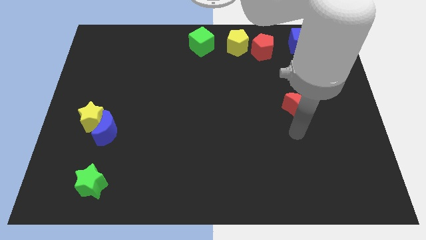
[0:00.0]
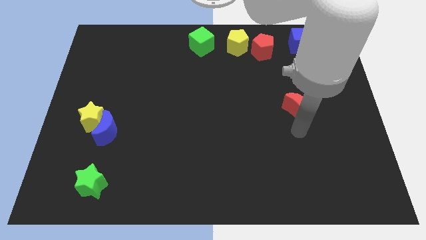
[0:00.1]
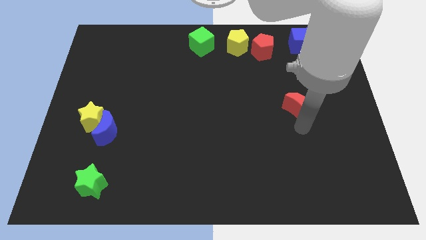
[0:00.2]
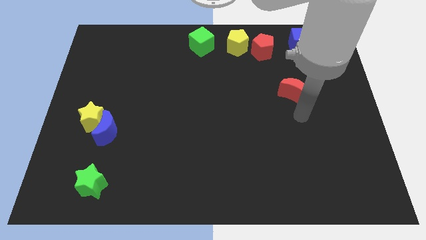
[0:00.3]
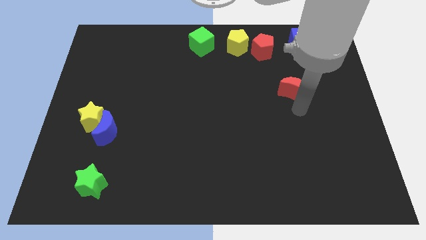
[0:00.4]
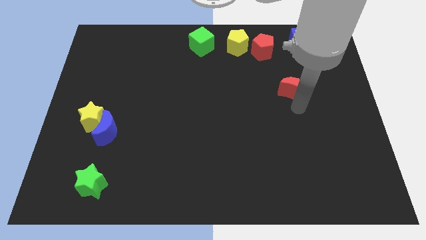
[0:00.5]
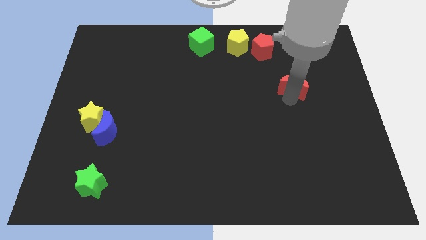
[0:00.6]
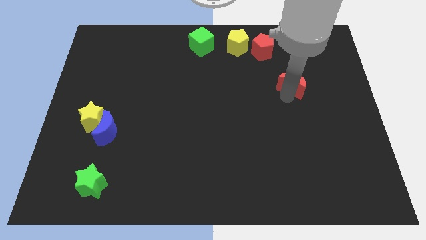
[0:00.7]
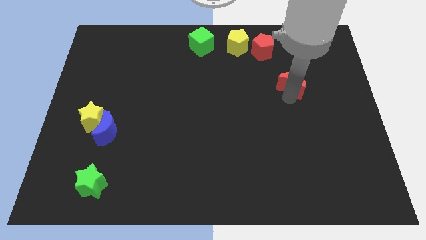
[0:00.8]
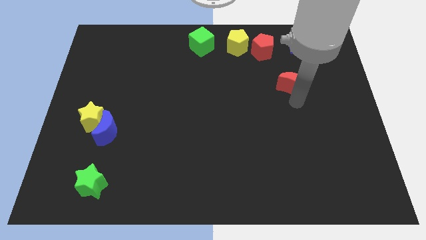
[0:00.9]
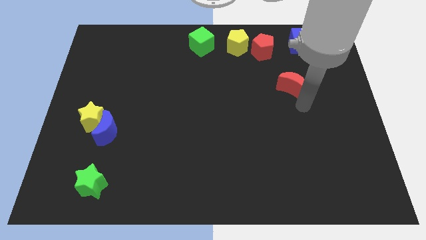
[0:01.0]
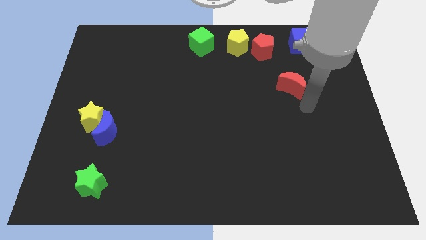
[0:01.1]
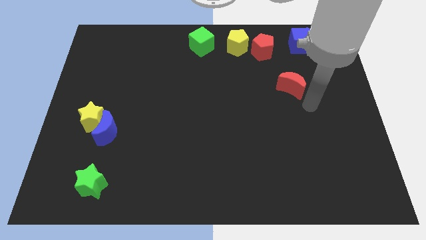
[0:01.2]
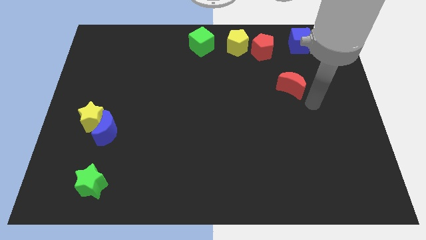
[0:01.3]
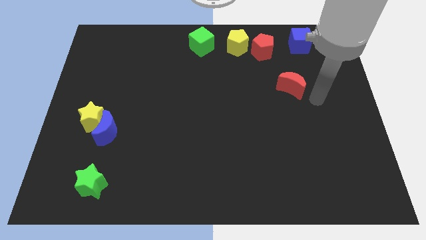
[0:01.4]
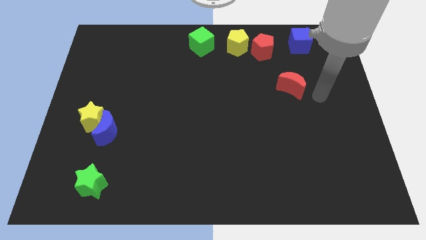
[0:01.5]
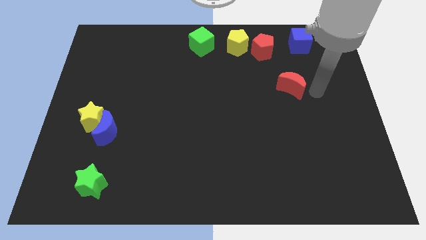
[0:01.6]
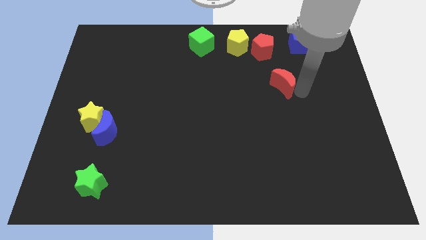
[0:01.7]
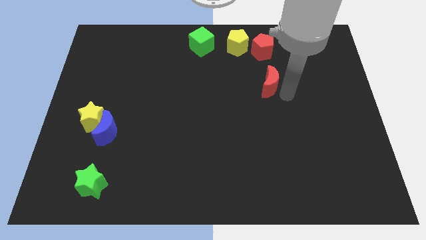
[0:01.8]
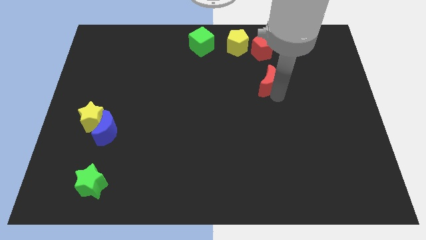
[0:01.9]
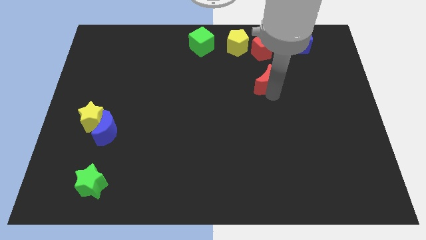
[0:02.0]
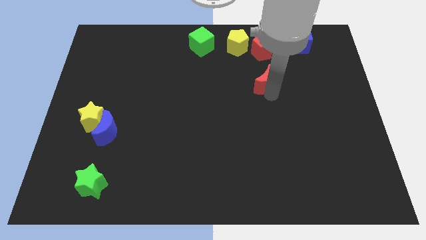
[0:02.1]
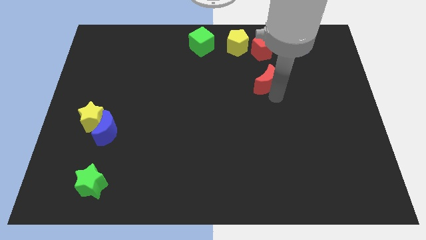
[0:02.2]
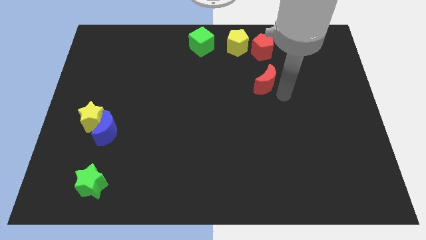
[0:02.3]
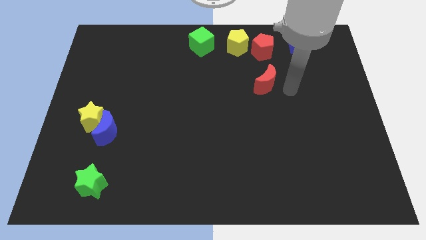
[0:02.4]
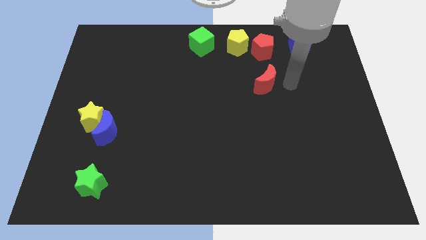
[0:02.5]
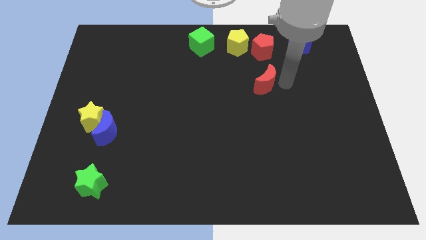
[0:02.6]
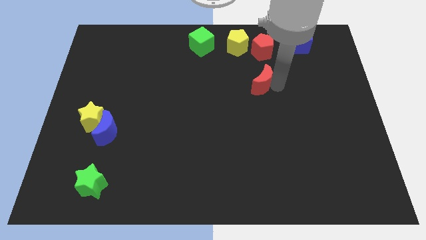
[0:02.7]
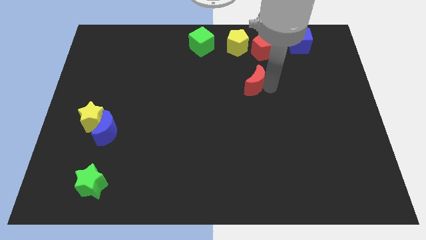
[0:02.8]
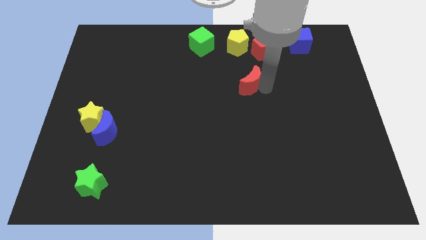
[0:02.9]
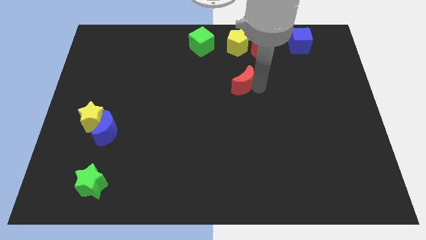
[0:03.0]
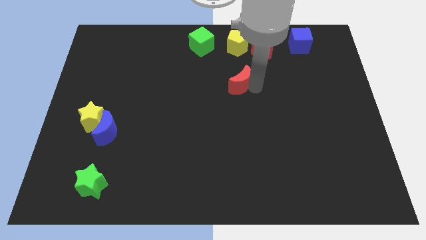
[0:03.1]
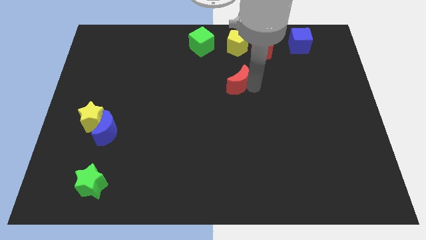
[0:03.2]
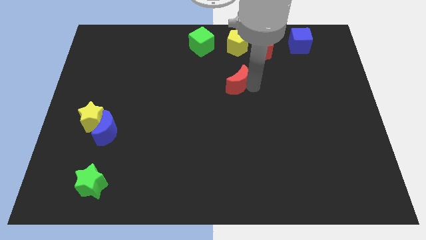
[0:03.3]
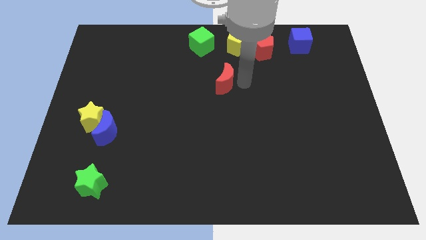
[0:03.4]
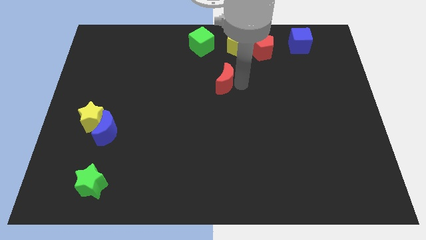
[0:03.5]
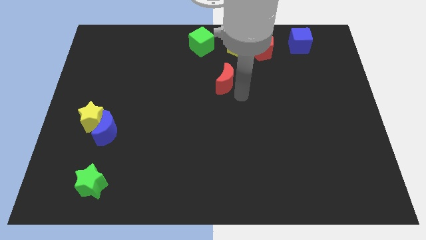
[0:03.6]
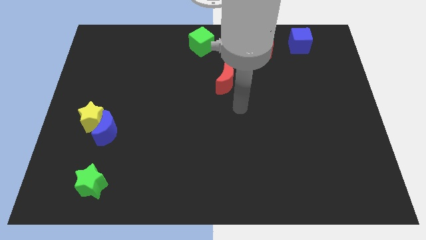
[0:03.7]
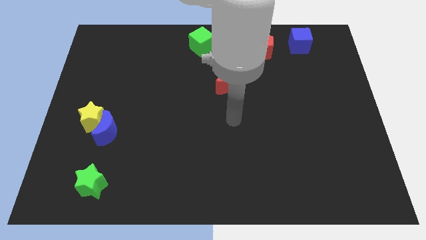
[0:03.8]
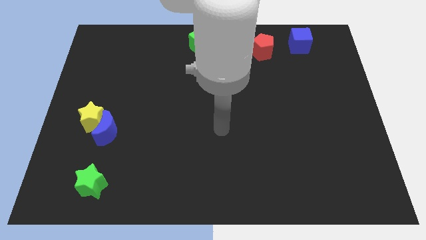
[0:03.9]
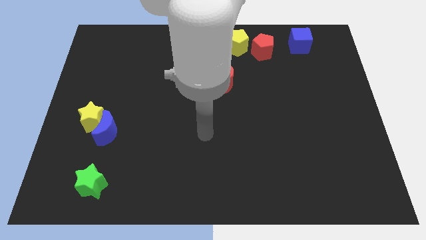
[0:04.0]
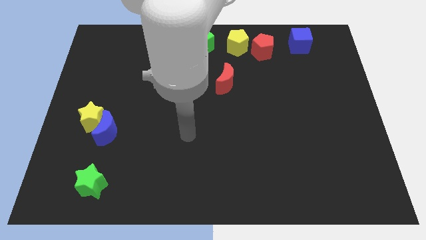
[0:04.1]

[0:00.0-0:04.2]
move the red moon to the bottom left of the yellow pentagon

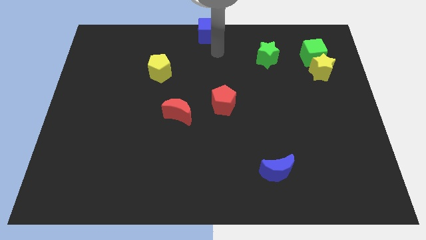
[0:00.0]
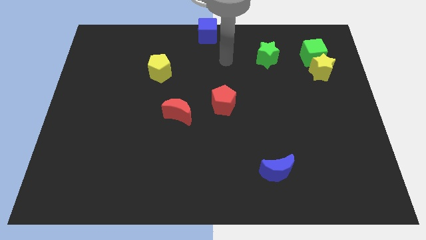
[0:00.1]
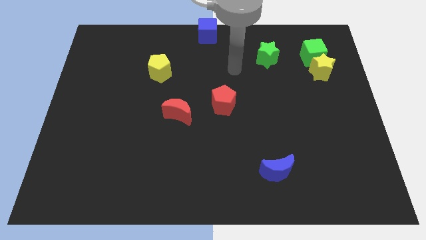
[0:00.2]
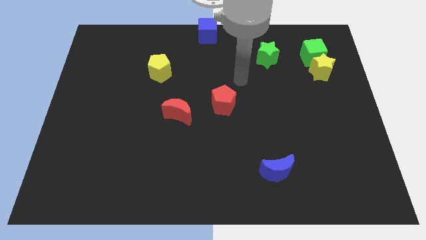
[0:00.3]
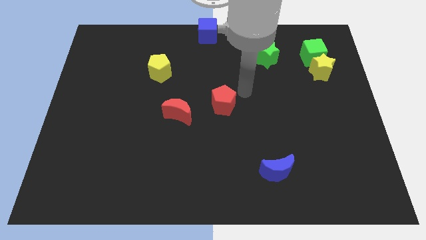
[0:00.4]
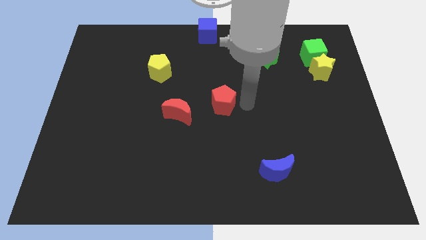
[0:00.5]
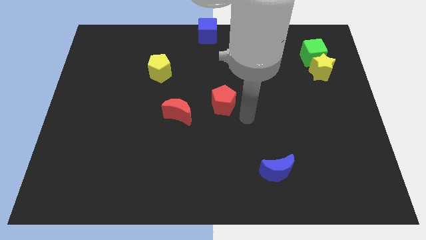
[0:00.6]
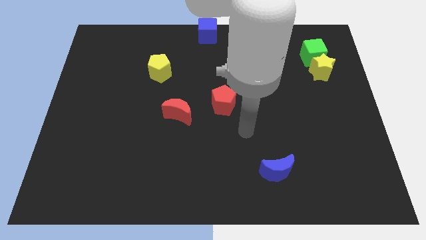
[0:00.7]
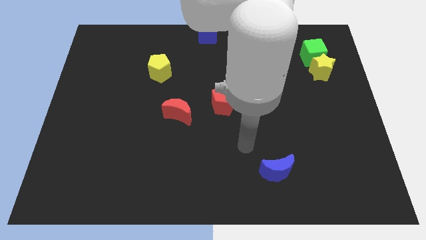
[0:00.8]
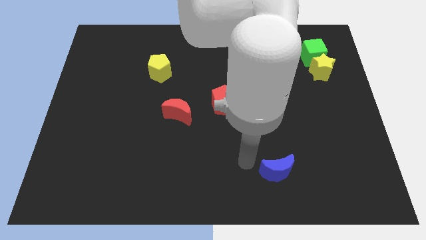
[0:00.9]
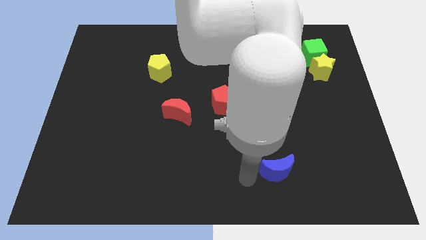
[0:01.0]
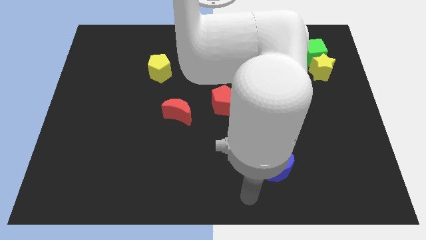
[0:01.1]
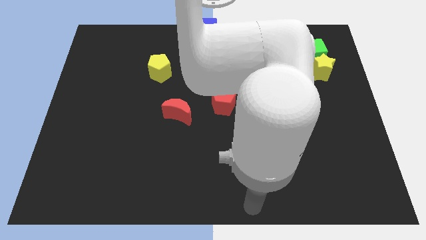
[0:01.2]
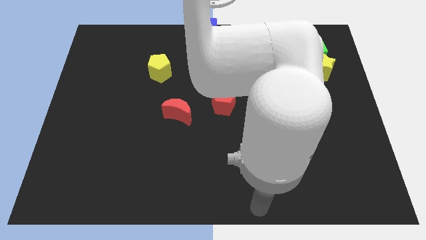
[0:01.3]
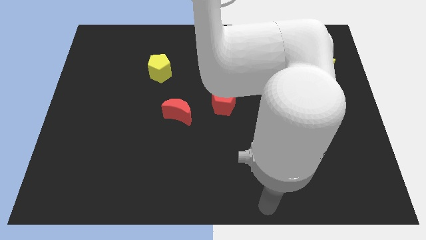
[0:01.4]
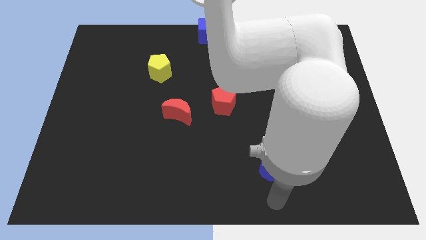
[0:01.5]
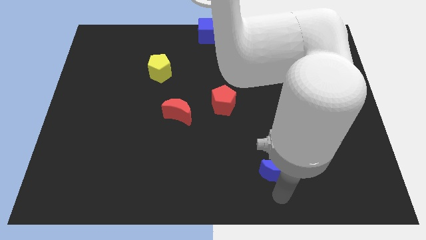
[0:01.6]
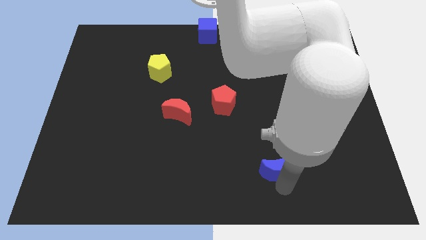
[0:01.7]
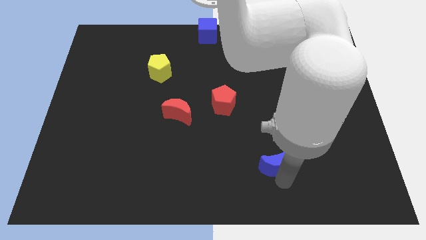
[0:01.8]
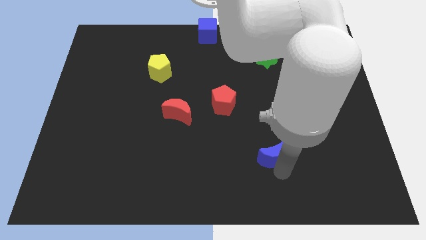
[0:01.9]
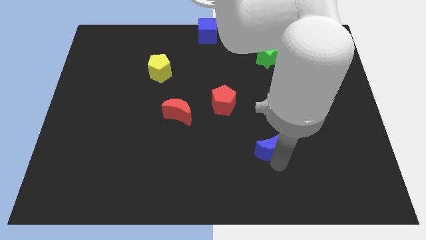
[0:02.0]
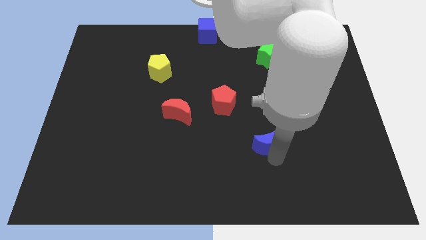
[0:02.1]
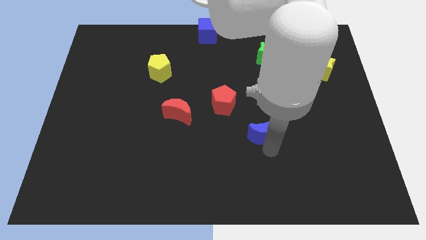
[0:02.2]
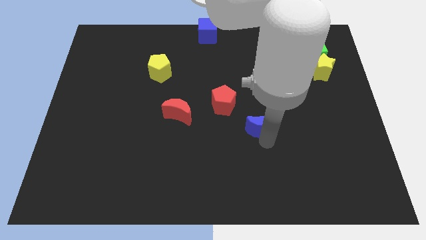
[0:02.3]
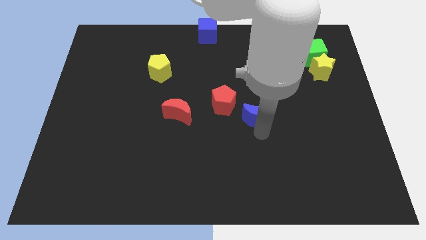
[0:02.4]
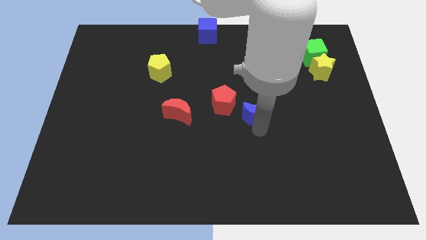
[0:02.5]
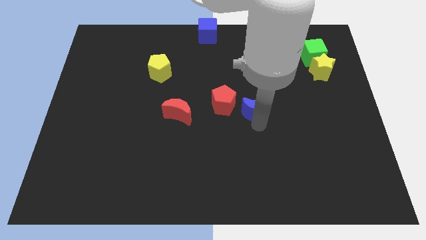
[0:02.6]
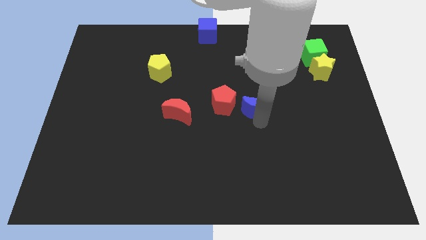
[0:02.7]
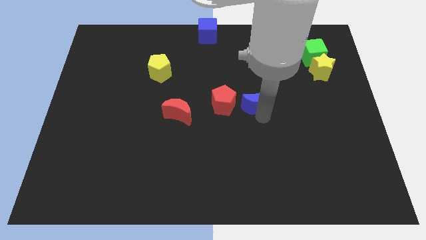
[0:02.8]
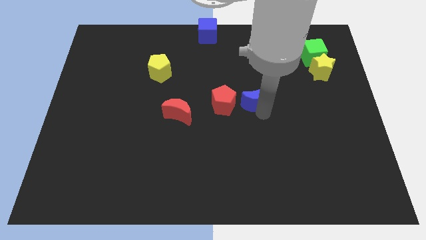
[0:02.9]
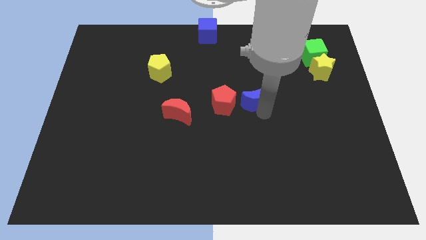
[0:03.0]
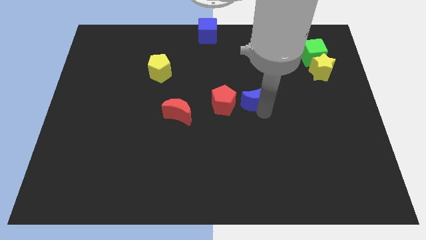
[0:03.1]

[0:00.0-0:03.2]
move the blue crescent right side to the red pentagon

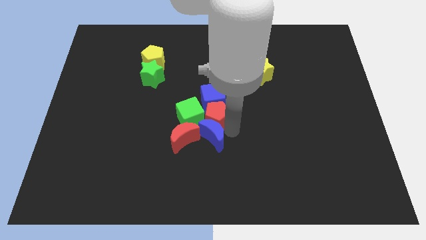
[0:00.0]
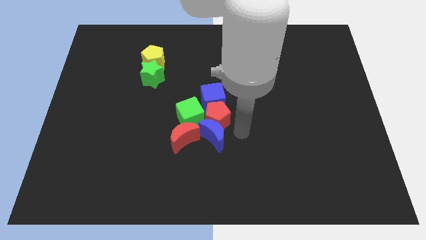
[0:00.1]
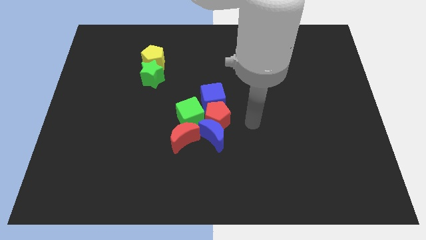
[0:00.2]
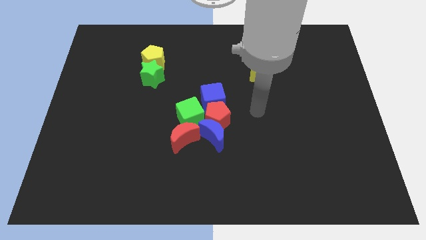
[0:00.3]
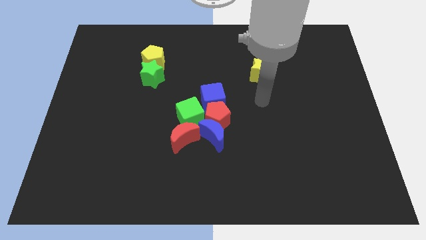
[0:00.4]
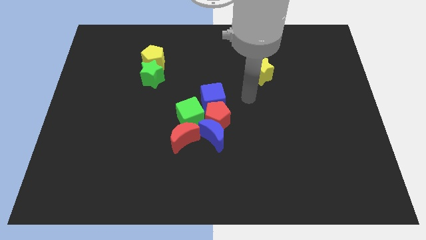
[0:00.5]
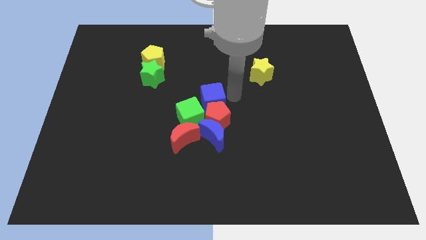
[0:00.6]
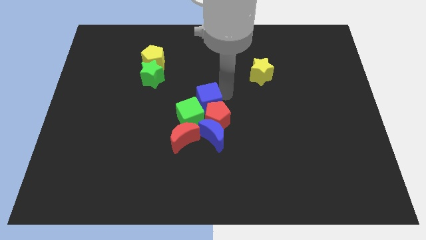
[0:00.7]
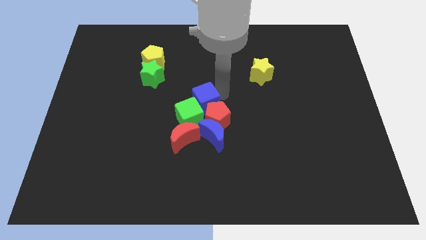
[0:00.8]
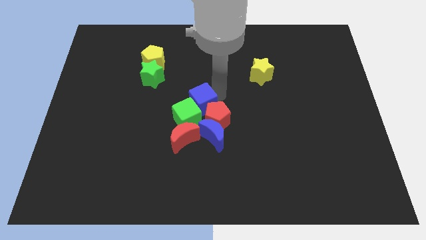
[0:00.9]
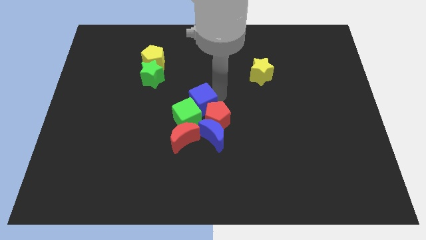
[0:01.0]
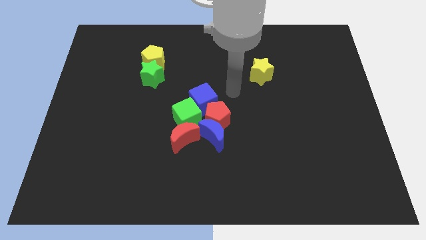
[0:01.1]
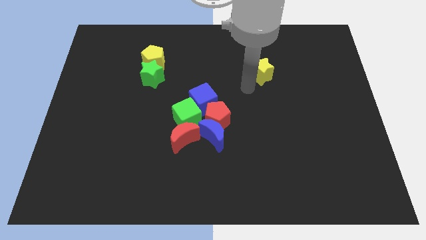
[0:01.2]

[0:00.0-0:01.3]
move the blue cube slightly to the left

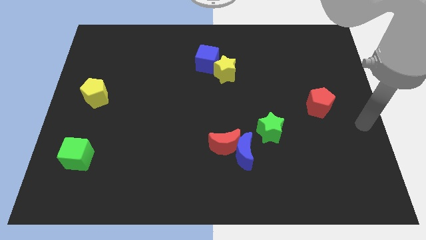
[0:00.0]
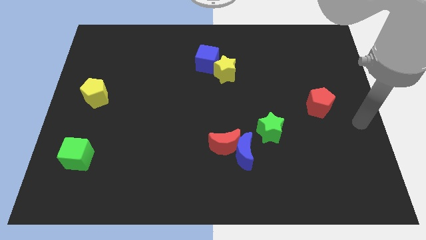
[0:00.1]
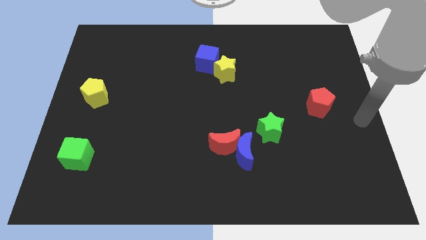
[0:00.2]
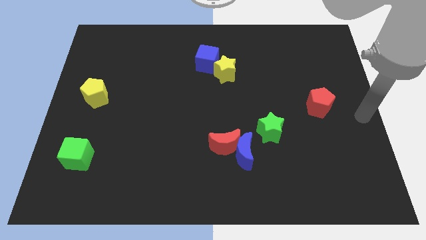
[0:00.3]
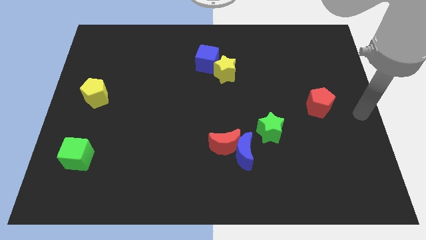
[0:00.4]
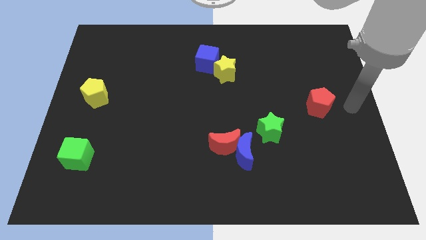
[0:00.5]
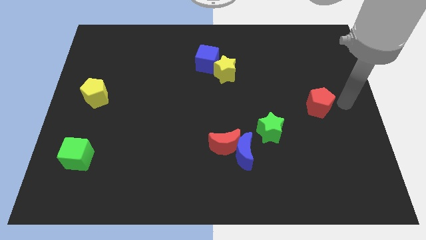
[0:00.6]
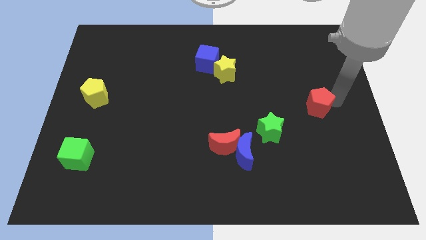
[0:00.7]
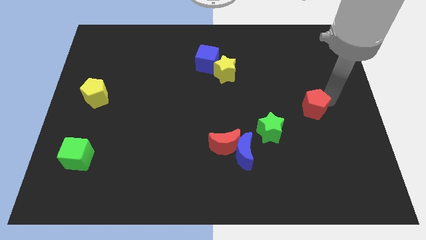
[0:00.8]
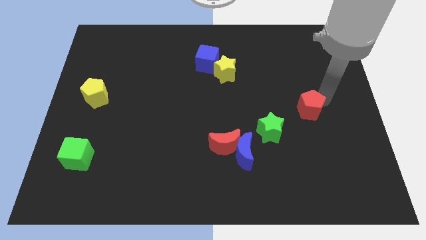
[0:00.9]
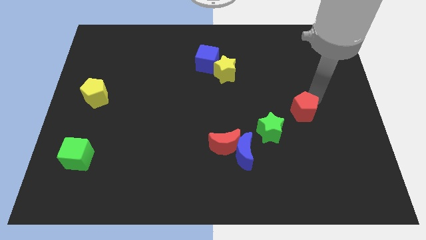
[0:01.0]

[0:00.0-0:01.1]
place red pentagon to the top right of green star
